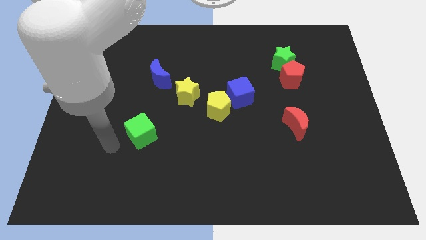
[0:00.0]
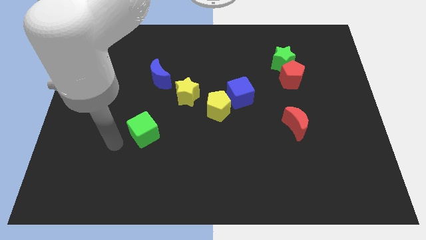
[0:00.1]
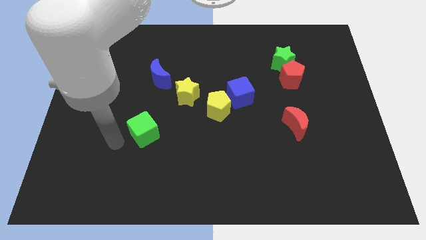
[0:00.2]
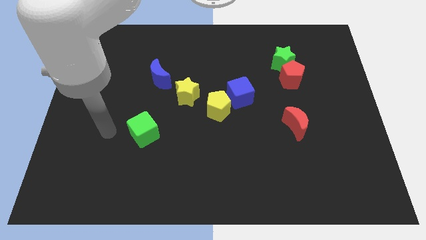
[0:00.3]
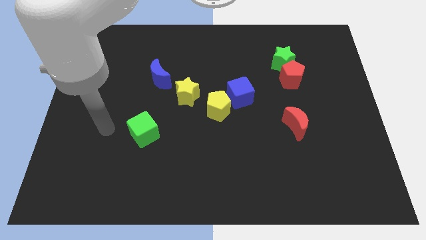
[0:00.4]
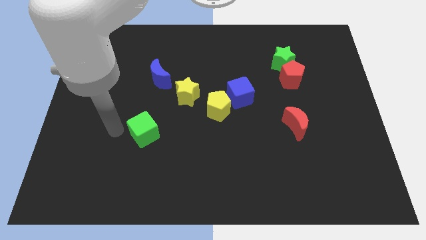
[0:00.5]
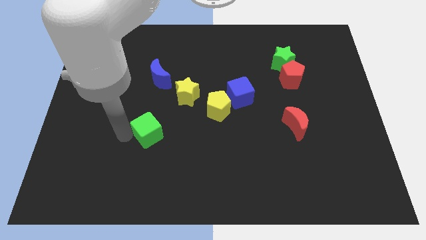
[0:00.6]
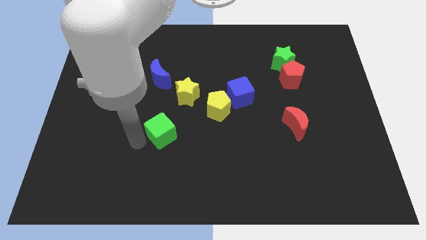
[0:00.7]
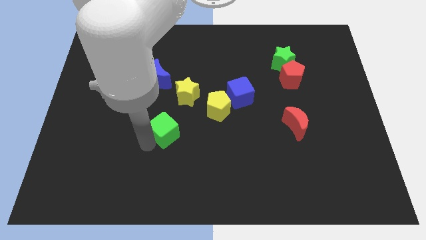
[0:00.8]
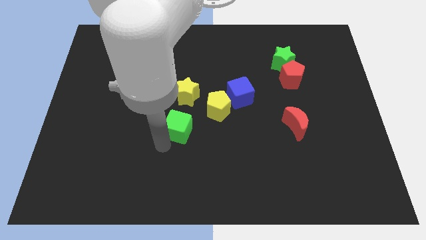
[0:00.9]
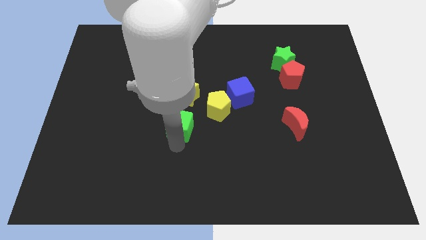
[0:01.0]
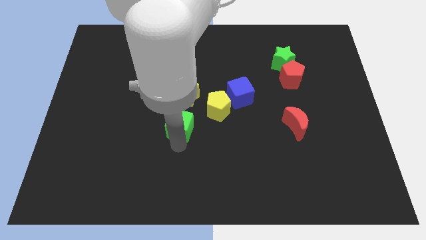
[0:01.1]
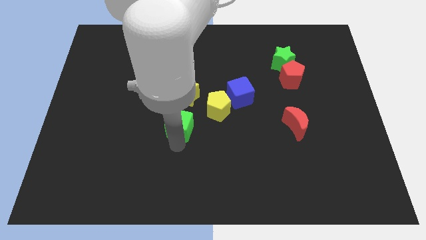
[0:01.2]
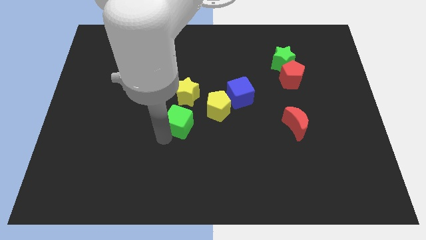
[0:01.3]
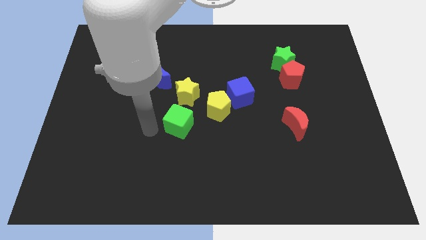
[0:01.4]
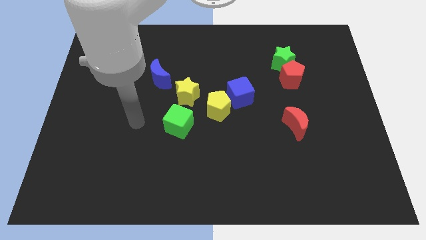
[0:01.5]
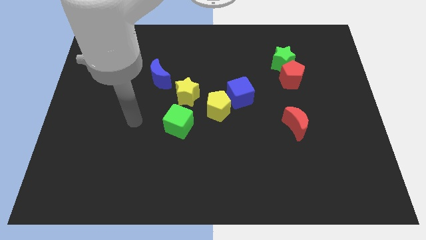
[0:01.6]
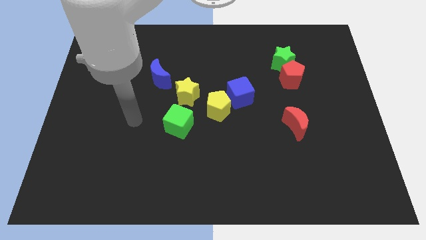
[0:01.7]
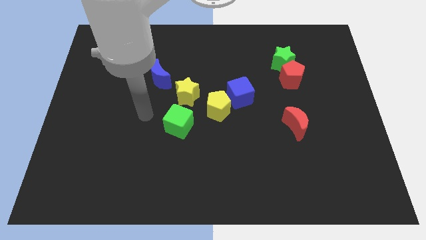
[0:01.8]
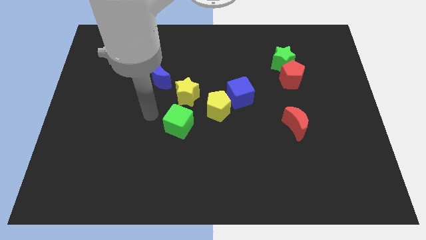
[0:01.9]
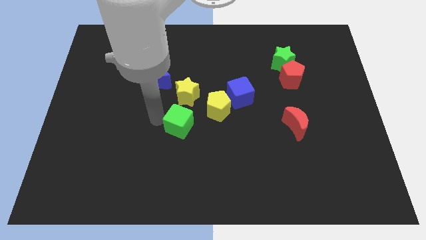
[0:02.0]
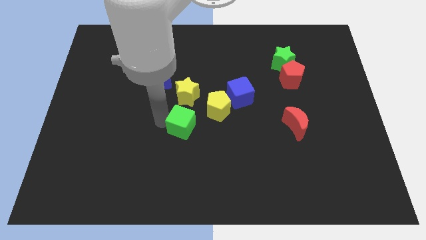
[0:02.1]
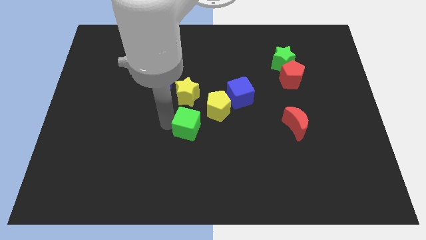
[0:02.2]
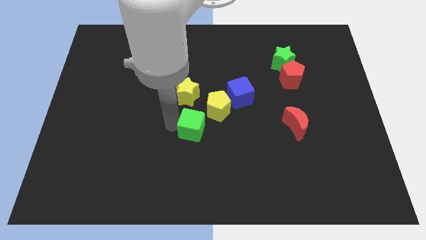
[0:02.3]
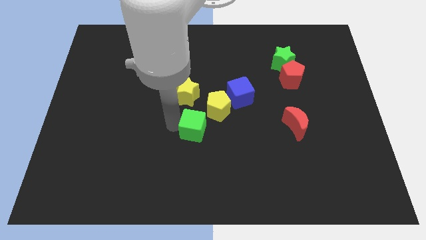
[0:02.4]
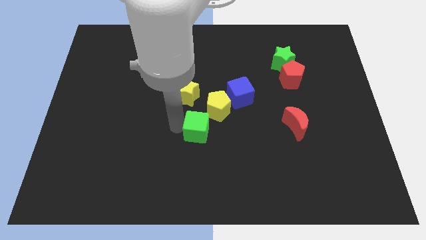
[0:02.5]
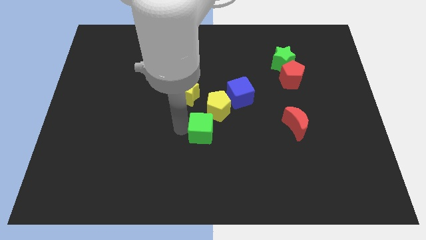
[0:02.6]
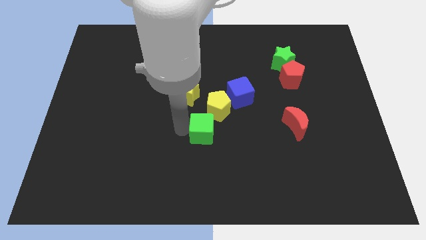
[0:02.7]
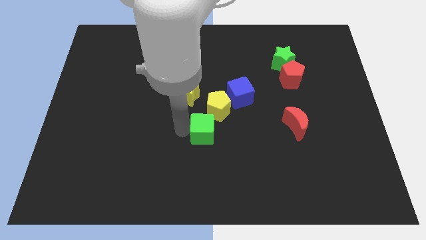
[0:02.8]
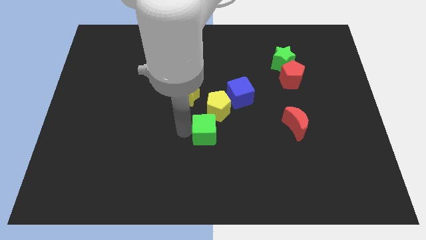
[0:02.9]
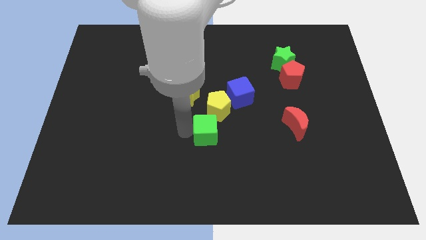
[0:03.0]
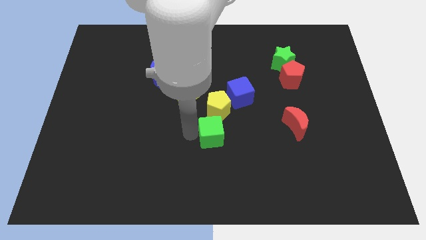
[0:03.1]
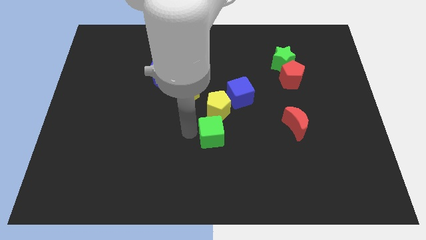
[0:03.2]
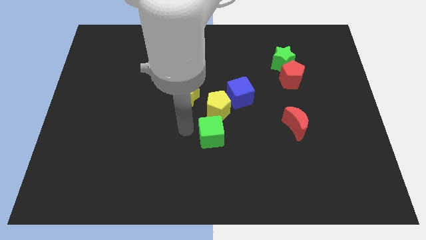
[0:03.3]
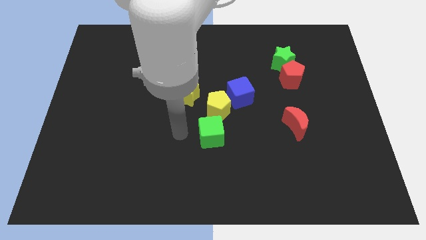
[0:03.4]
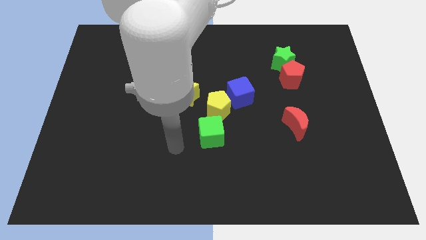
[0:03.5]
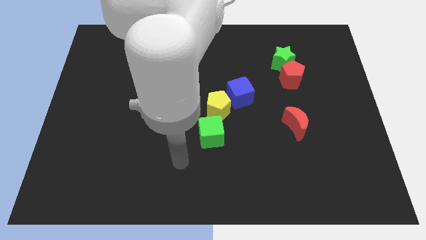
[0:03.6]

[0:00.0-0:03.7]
put the green cube below the yellow pentagon

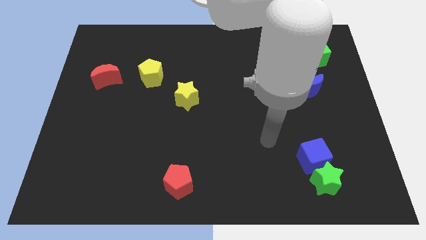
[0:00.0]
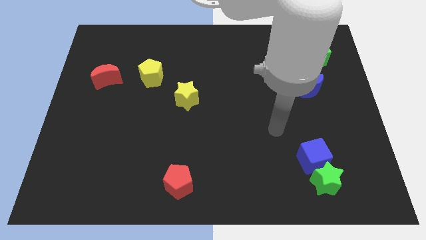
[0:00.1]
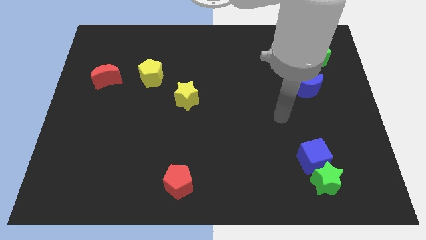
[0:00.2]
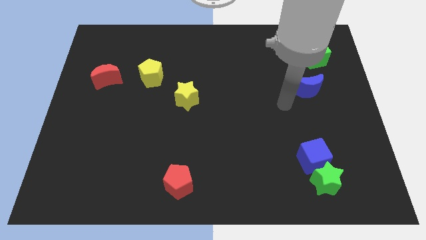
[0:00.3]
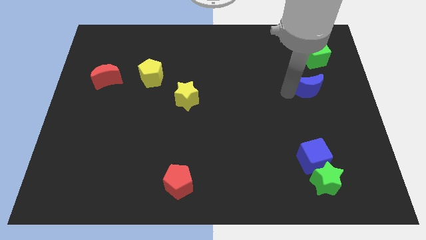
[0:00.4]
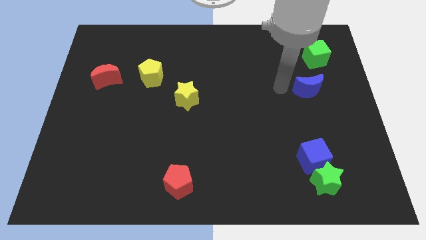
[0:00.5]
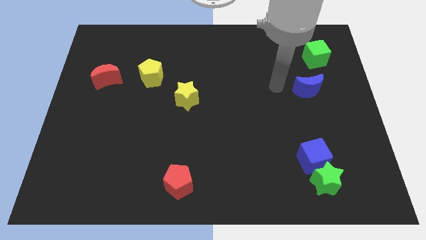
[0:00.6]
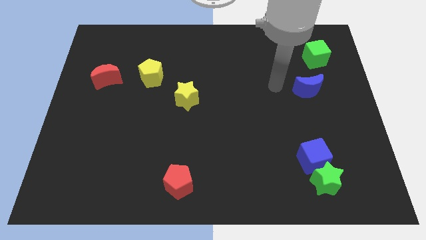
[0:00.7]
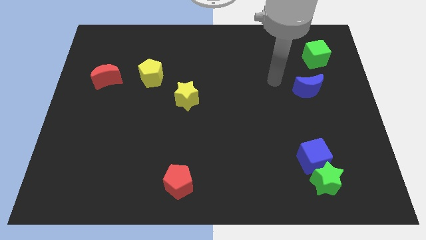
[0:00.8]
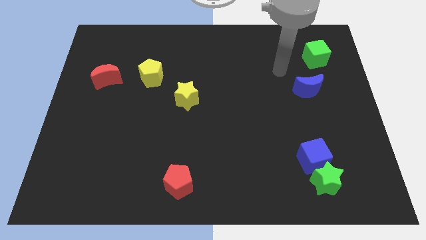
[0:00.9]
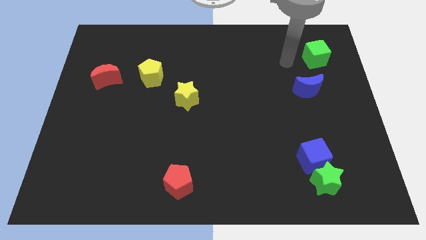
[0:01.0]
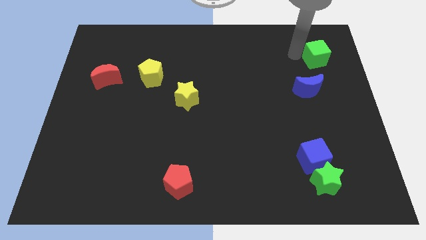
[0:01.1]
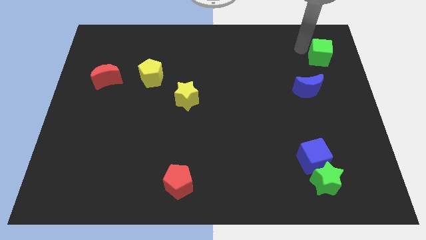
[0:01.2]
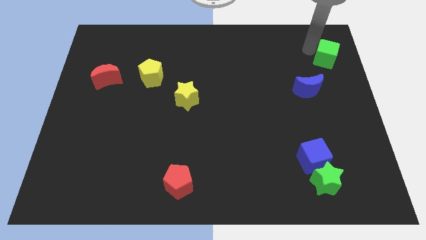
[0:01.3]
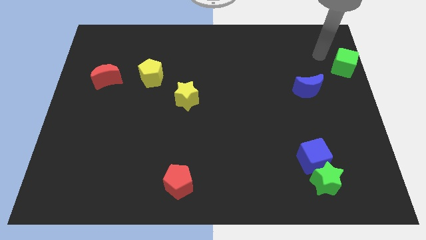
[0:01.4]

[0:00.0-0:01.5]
move the green cube to the top right side of the blue moon

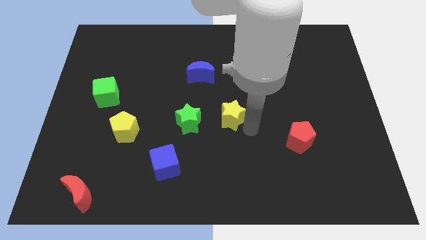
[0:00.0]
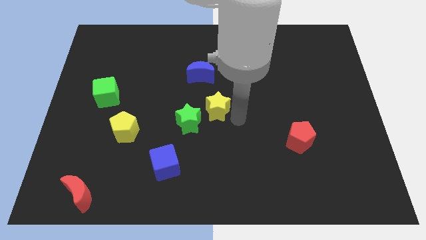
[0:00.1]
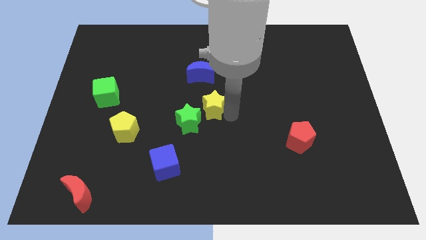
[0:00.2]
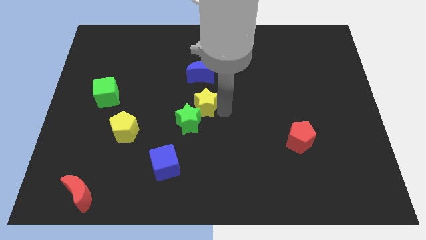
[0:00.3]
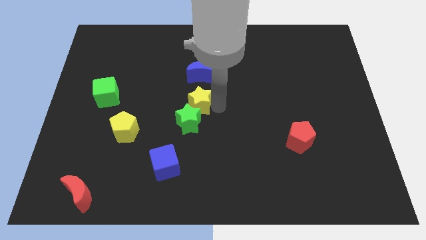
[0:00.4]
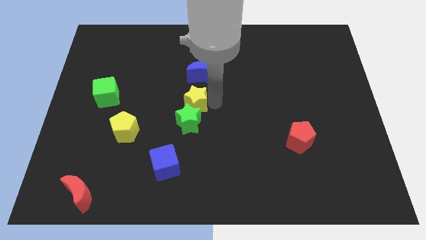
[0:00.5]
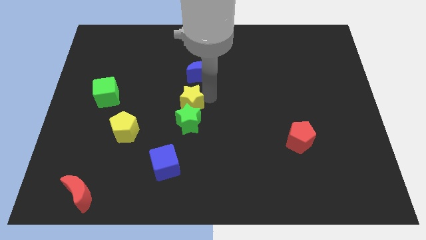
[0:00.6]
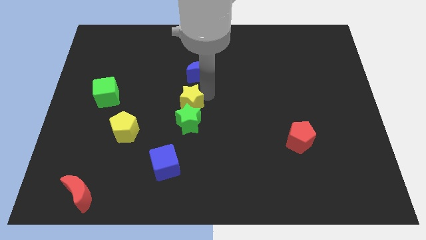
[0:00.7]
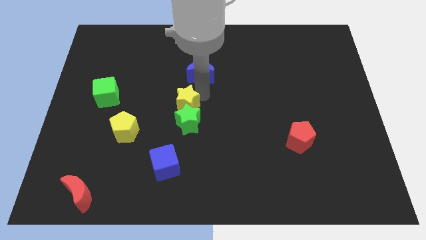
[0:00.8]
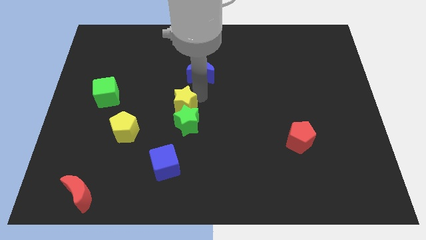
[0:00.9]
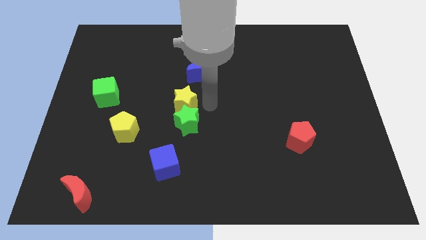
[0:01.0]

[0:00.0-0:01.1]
move yellow star above the green star

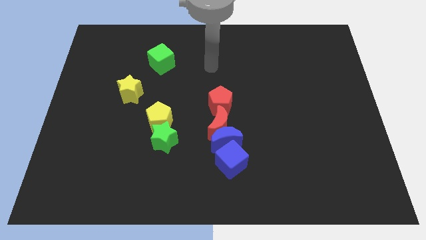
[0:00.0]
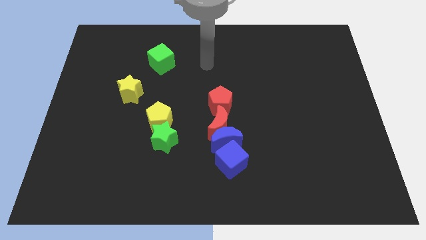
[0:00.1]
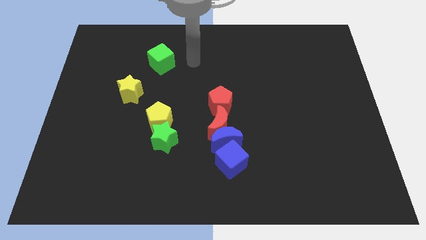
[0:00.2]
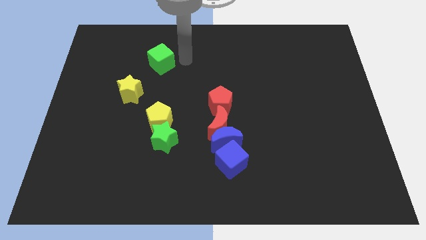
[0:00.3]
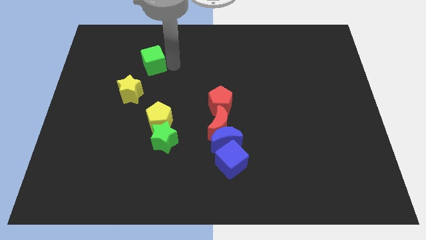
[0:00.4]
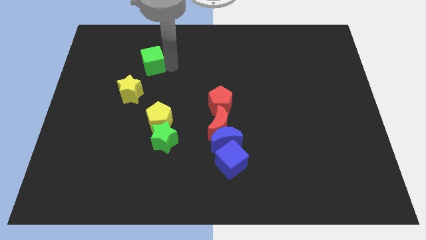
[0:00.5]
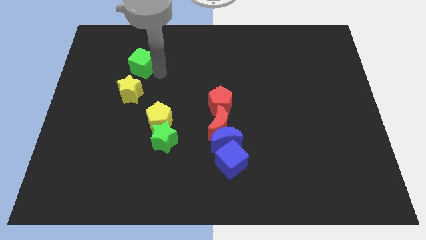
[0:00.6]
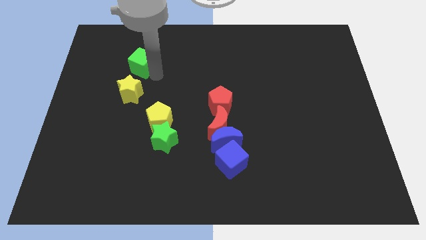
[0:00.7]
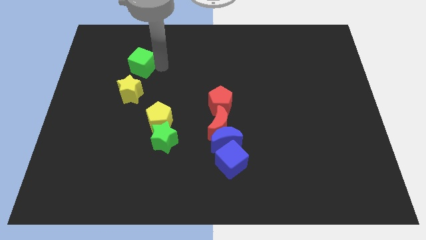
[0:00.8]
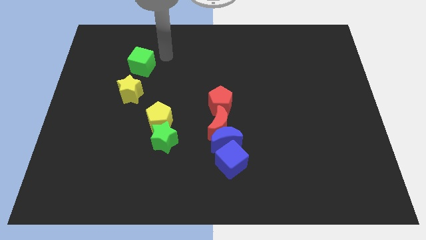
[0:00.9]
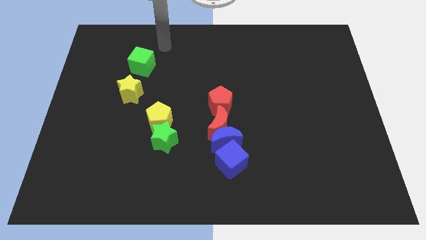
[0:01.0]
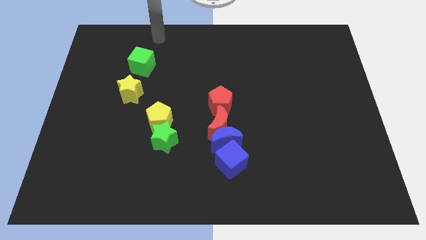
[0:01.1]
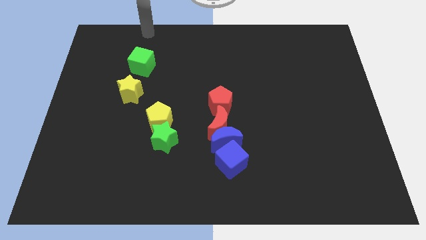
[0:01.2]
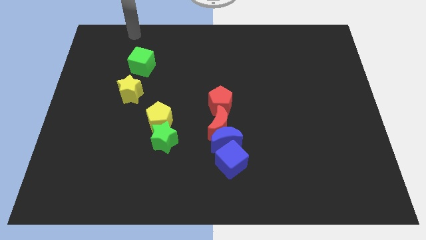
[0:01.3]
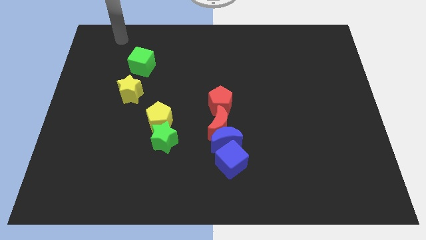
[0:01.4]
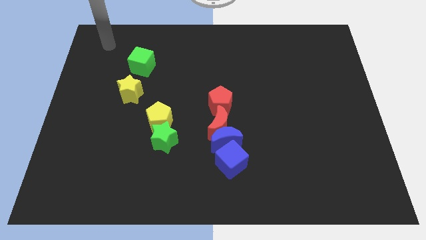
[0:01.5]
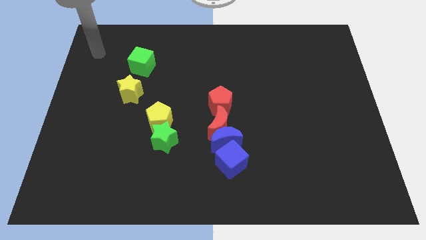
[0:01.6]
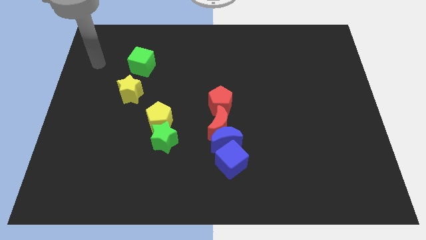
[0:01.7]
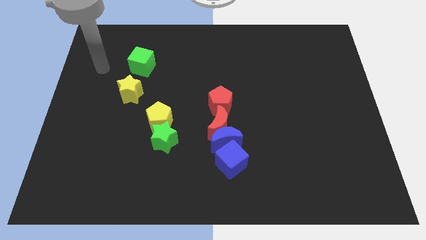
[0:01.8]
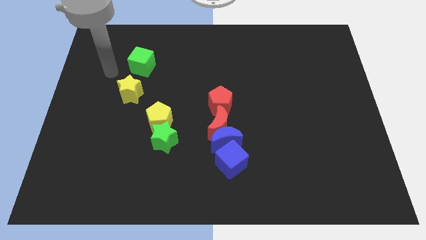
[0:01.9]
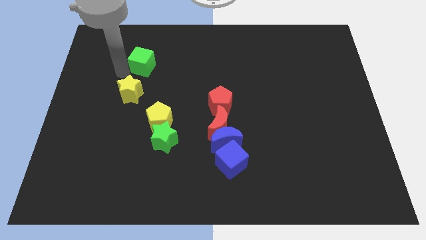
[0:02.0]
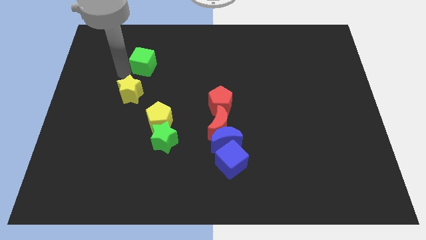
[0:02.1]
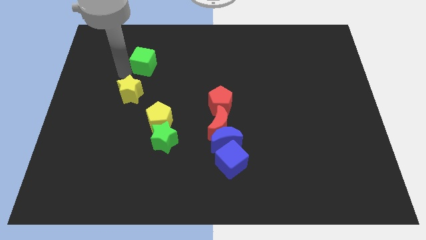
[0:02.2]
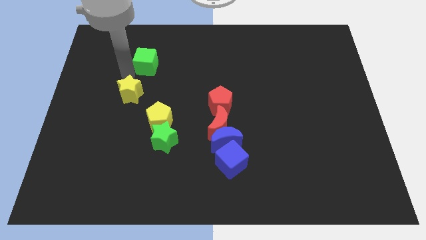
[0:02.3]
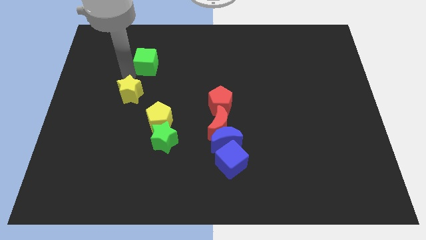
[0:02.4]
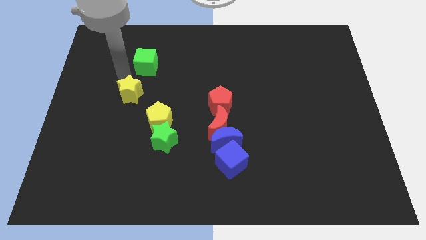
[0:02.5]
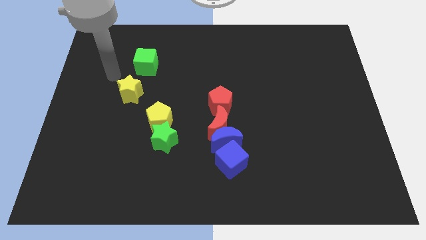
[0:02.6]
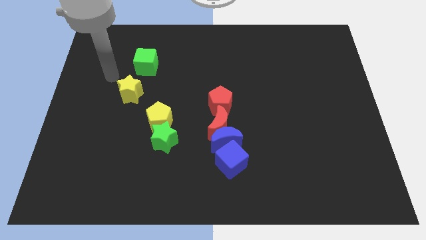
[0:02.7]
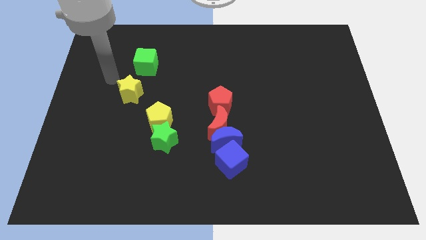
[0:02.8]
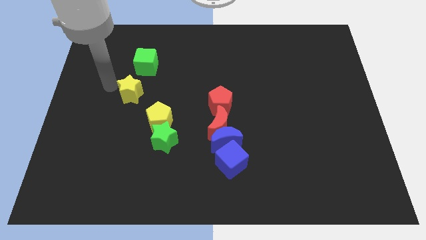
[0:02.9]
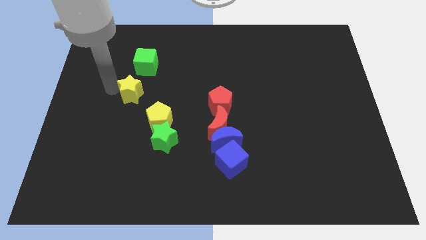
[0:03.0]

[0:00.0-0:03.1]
move the green cube to the top of the yellow star
